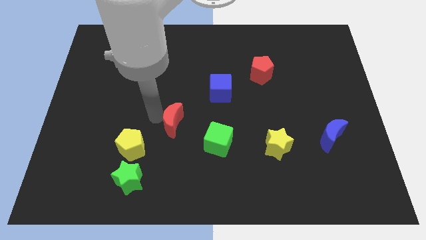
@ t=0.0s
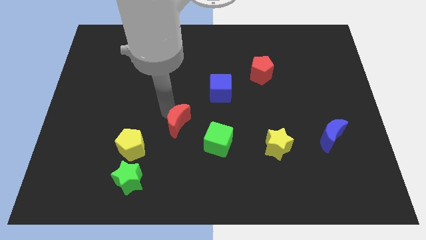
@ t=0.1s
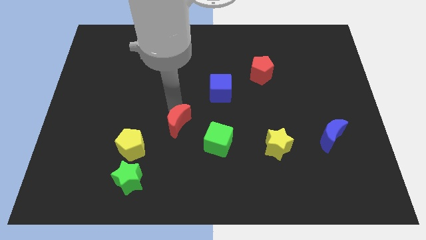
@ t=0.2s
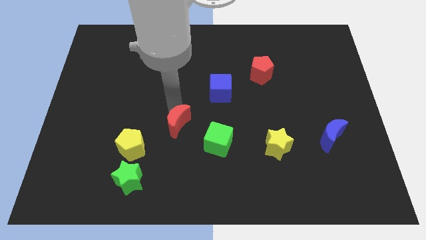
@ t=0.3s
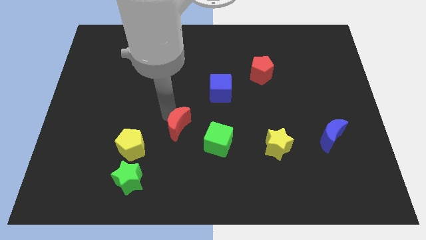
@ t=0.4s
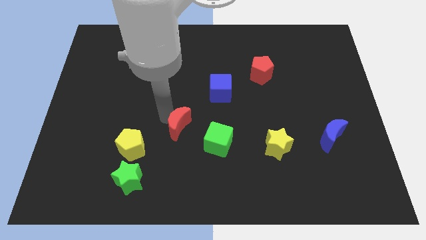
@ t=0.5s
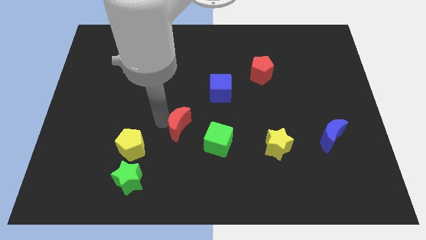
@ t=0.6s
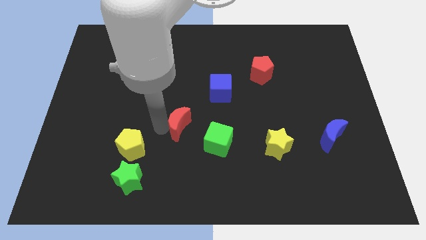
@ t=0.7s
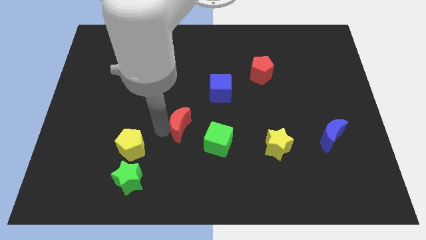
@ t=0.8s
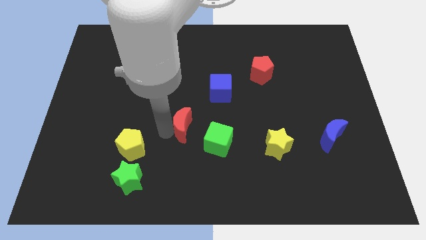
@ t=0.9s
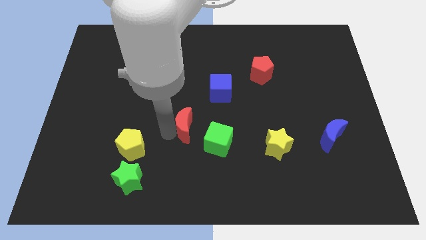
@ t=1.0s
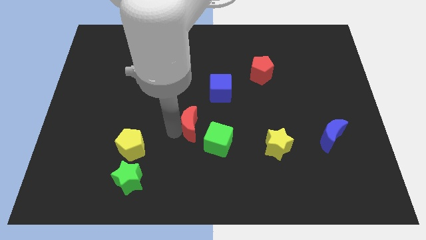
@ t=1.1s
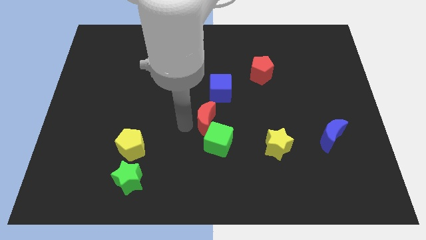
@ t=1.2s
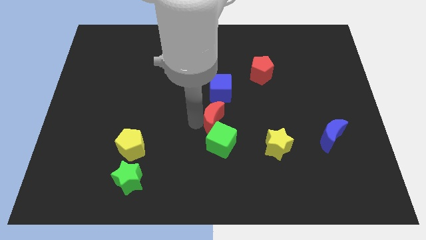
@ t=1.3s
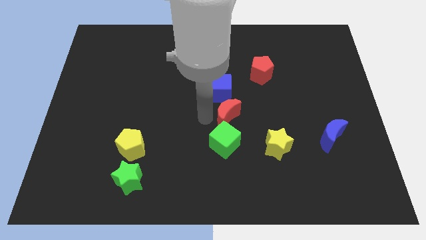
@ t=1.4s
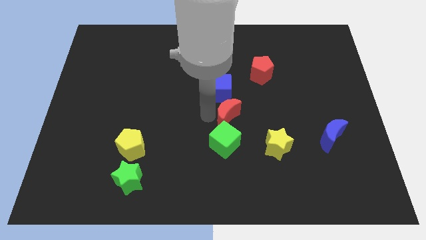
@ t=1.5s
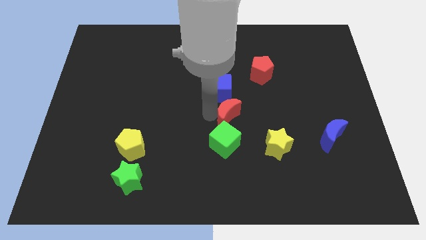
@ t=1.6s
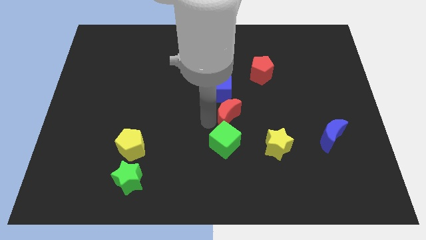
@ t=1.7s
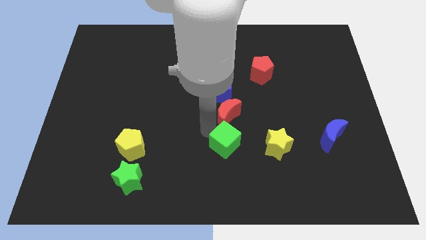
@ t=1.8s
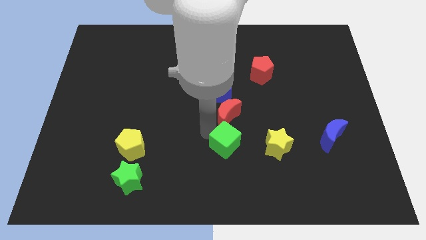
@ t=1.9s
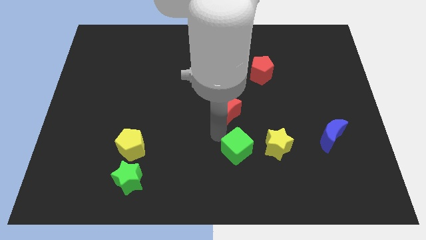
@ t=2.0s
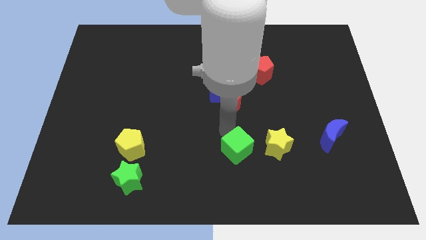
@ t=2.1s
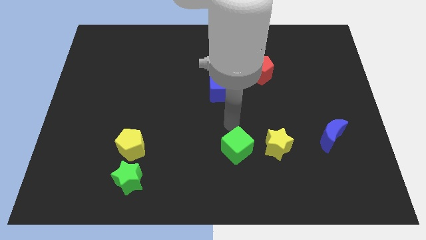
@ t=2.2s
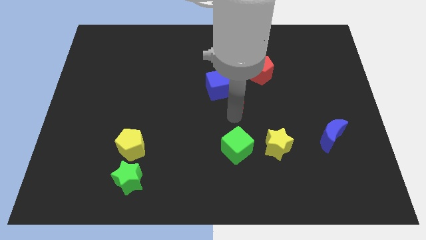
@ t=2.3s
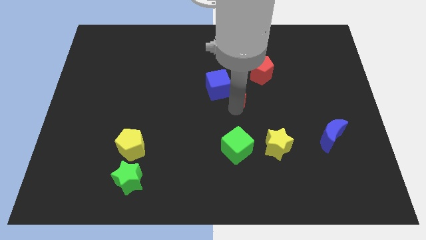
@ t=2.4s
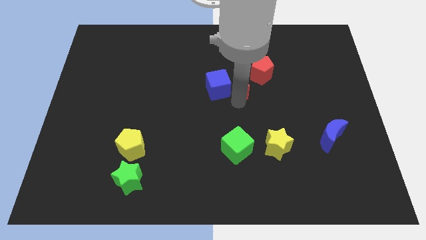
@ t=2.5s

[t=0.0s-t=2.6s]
push green cub slightly below

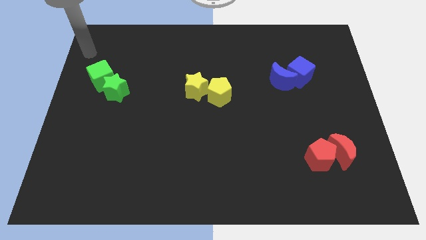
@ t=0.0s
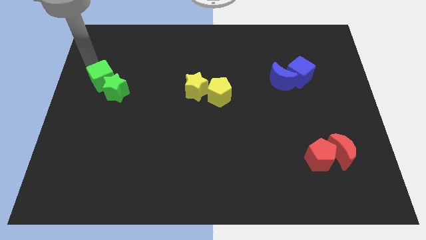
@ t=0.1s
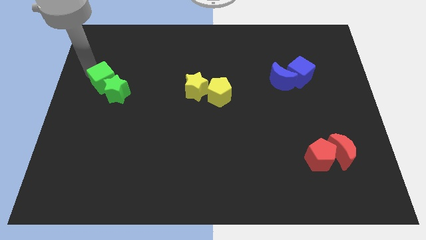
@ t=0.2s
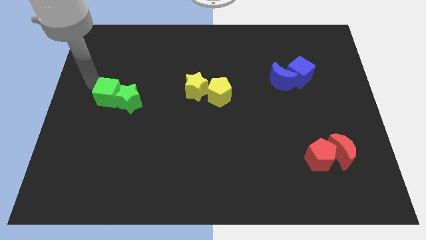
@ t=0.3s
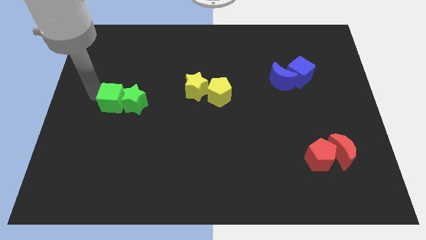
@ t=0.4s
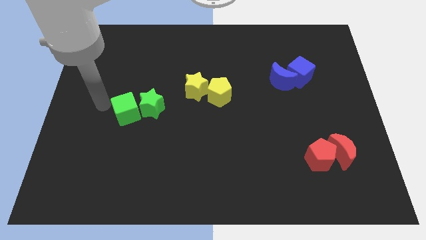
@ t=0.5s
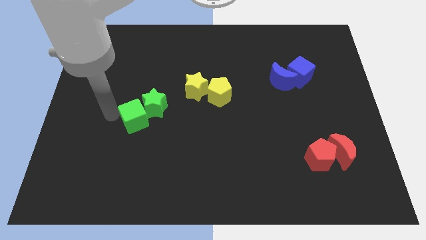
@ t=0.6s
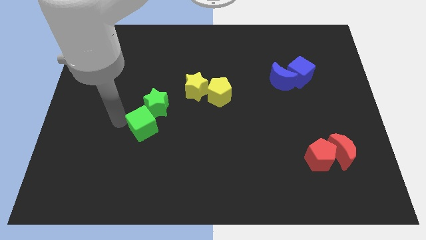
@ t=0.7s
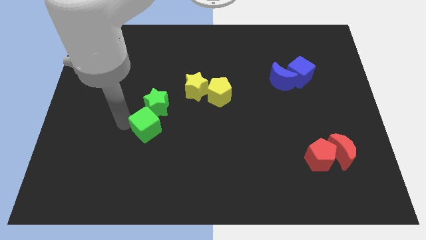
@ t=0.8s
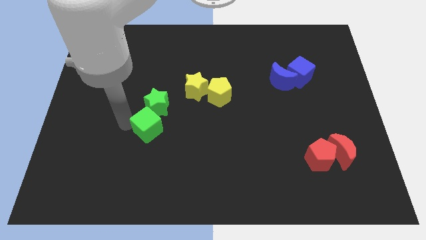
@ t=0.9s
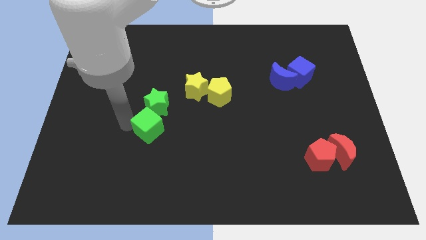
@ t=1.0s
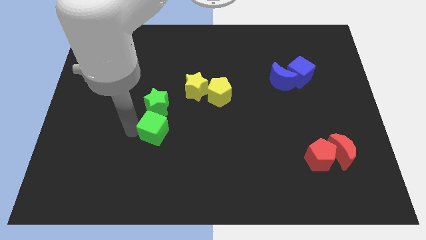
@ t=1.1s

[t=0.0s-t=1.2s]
push the green star and green cube towards the center

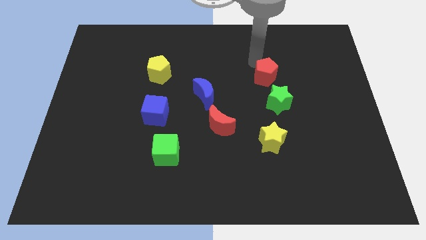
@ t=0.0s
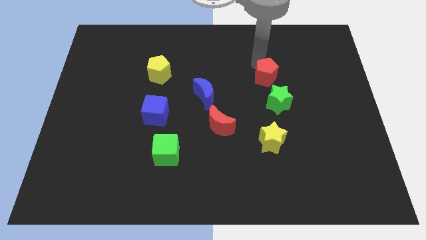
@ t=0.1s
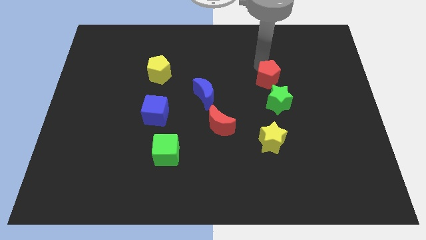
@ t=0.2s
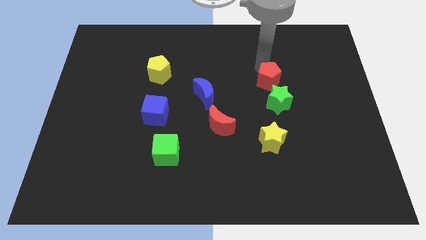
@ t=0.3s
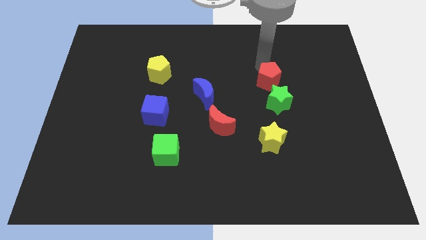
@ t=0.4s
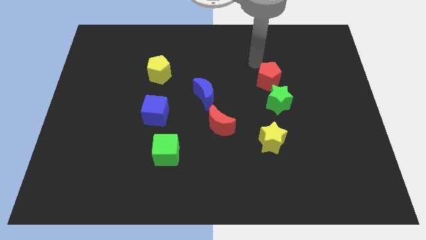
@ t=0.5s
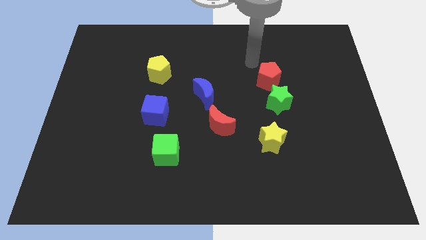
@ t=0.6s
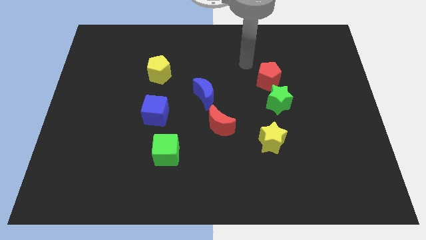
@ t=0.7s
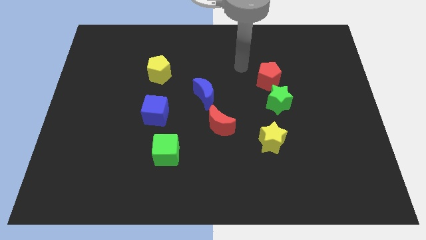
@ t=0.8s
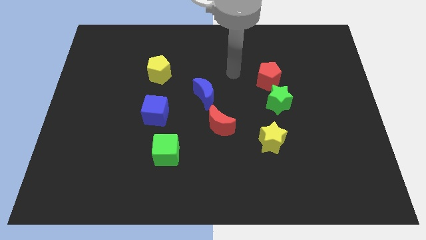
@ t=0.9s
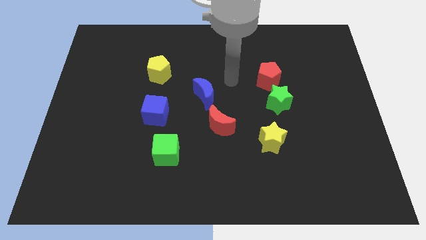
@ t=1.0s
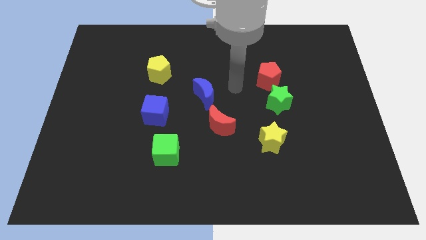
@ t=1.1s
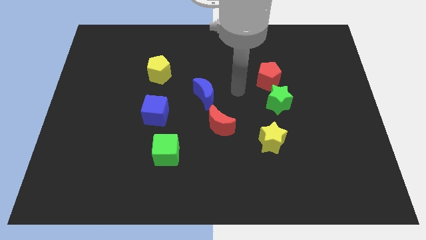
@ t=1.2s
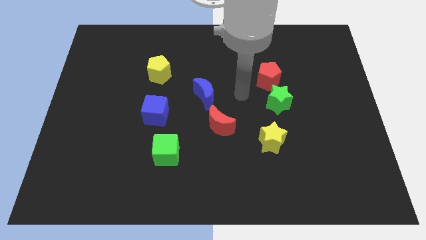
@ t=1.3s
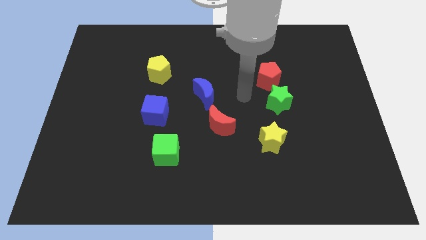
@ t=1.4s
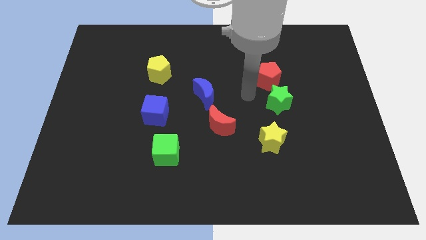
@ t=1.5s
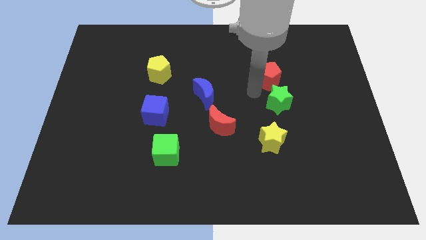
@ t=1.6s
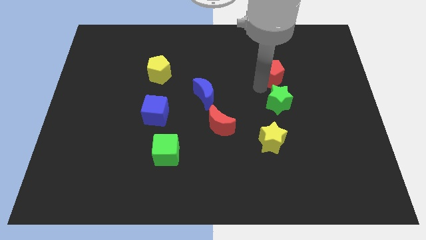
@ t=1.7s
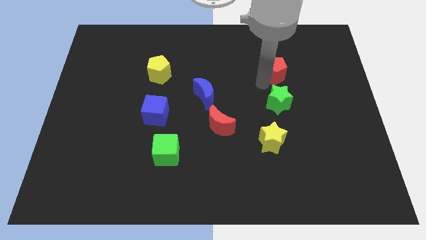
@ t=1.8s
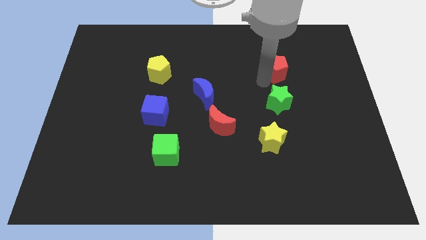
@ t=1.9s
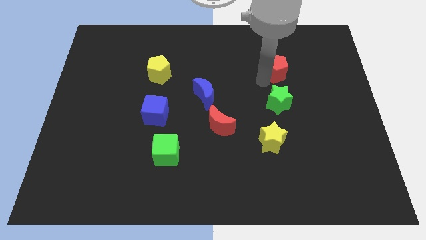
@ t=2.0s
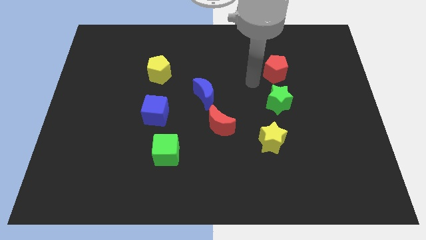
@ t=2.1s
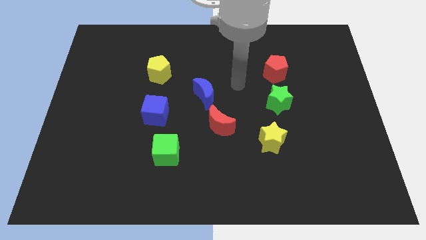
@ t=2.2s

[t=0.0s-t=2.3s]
place the red pentagon above the green star

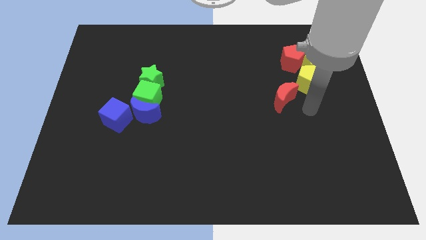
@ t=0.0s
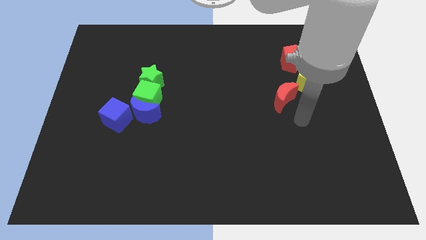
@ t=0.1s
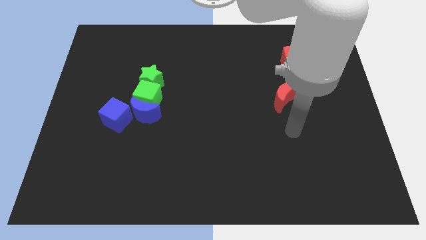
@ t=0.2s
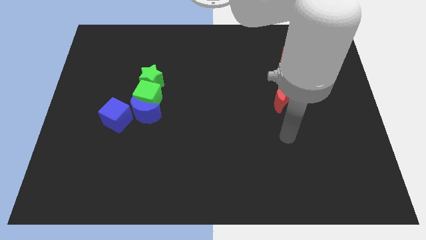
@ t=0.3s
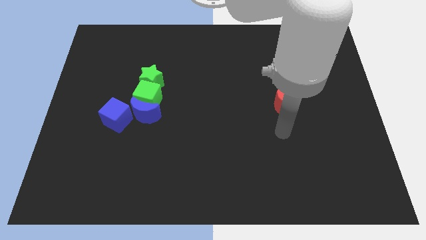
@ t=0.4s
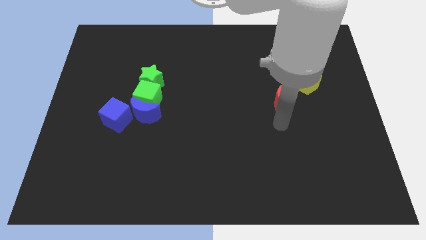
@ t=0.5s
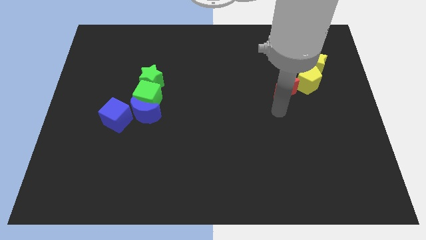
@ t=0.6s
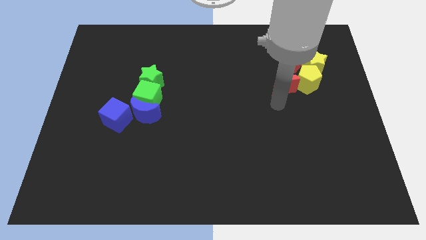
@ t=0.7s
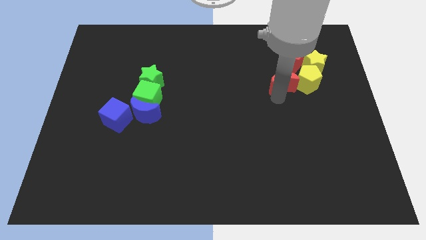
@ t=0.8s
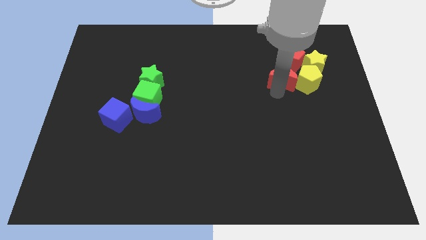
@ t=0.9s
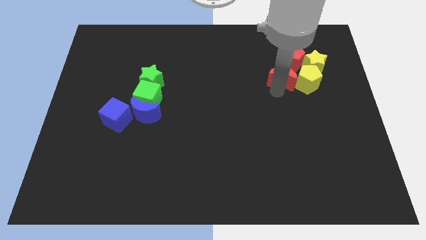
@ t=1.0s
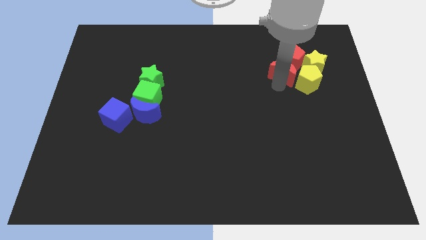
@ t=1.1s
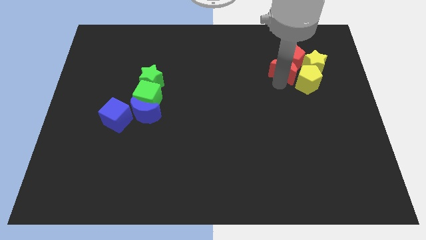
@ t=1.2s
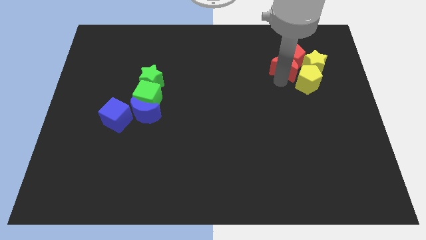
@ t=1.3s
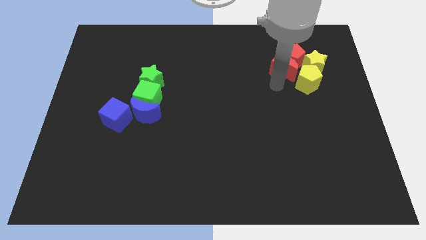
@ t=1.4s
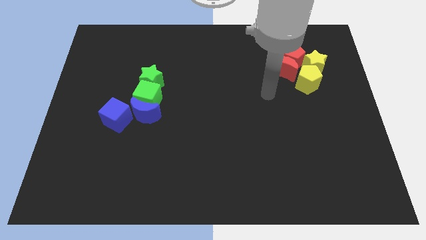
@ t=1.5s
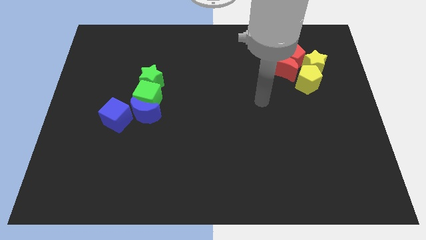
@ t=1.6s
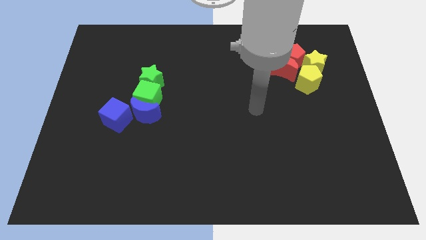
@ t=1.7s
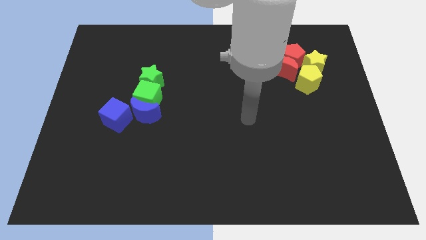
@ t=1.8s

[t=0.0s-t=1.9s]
push the red crescent below the red pentagon

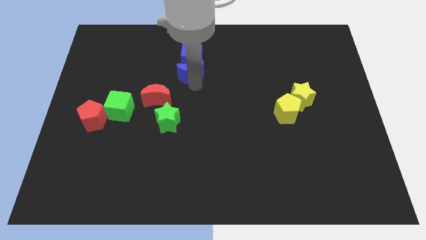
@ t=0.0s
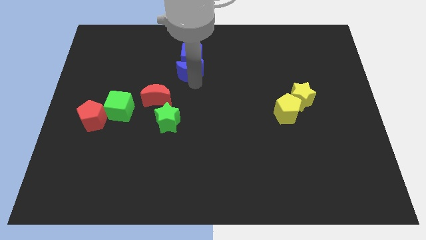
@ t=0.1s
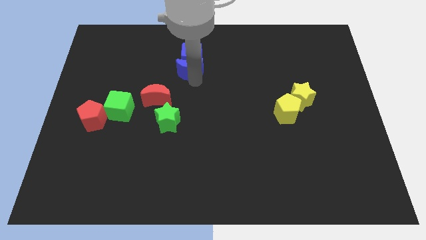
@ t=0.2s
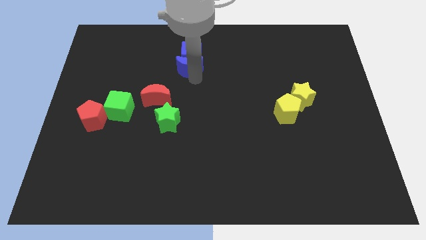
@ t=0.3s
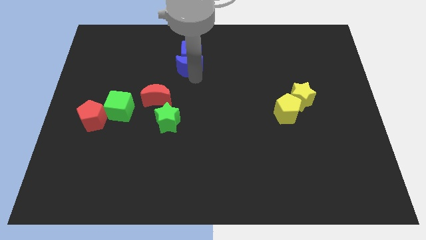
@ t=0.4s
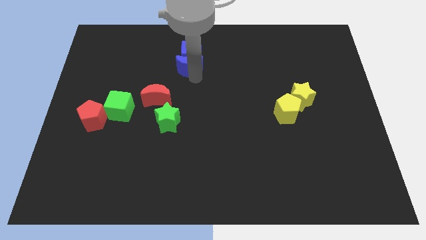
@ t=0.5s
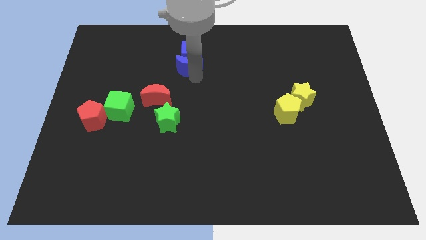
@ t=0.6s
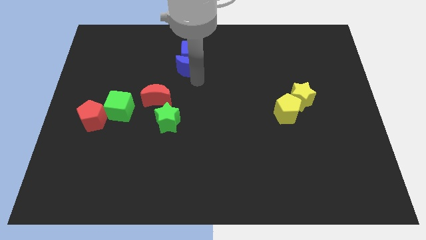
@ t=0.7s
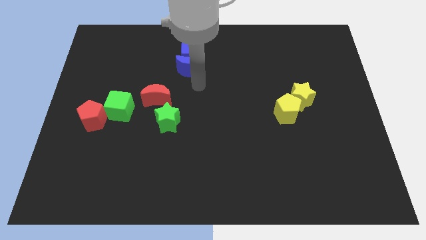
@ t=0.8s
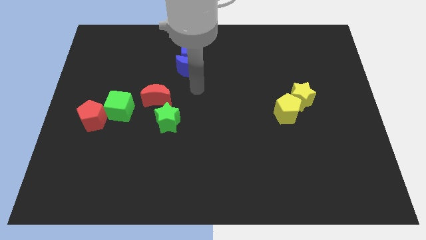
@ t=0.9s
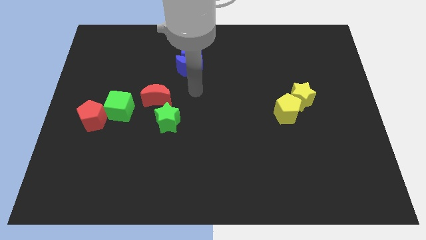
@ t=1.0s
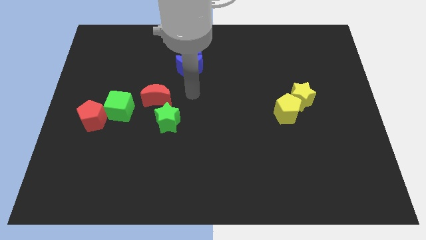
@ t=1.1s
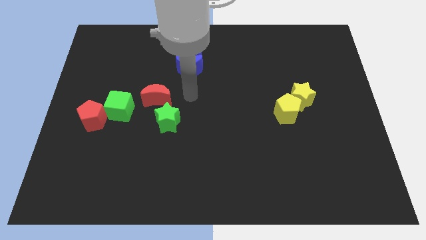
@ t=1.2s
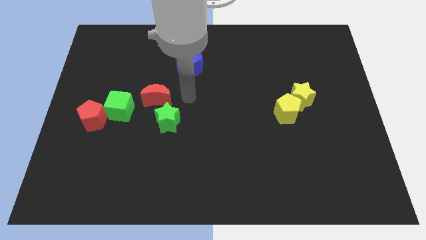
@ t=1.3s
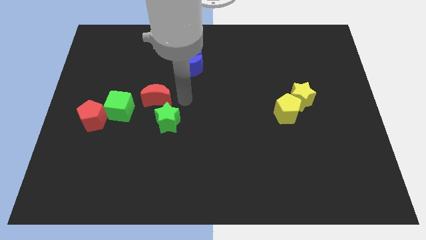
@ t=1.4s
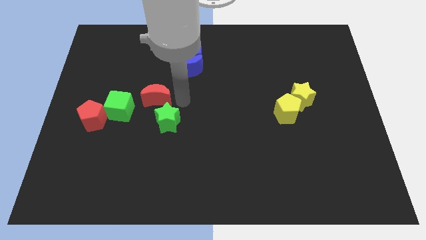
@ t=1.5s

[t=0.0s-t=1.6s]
push blue crescent in to blue cube
